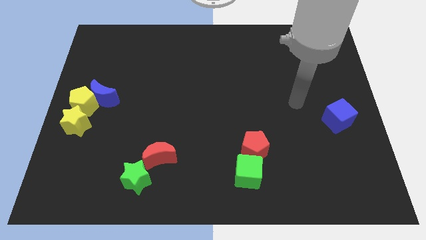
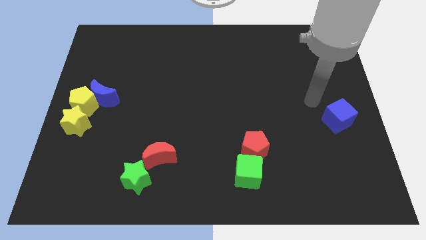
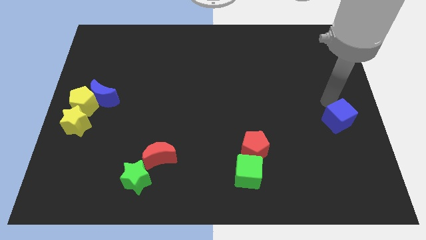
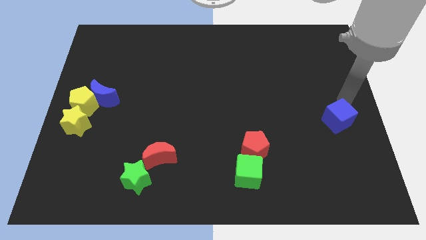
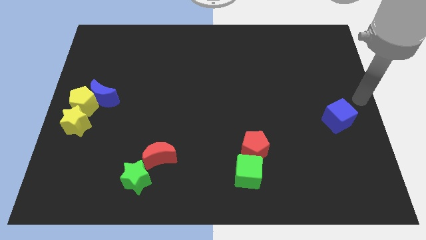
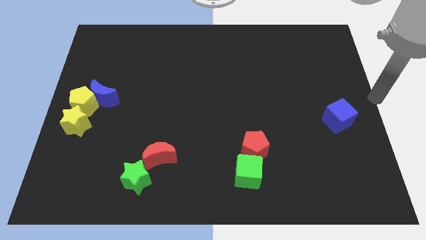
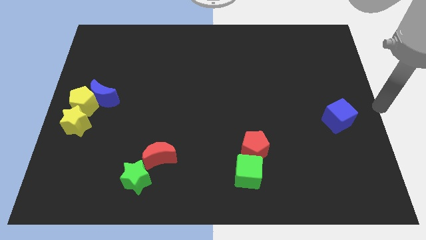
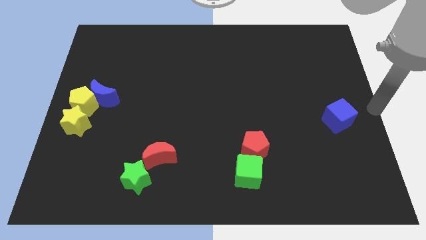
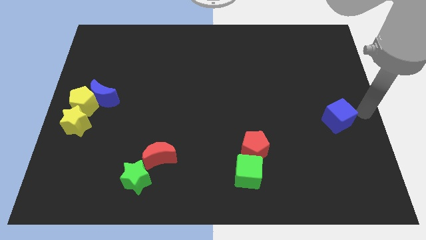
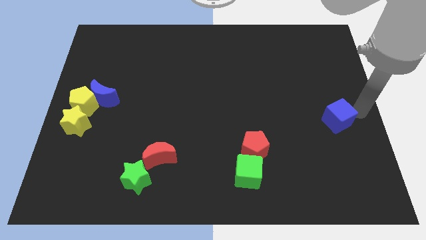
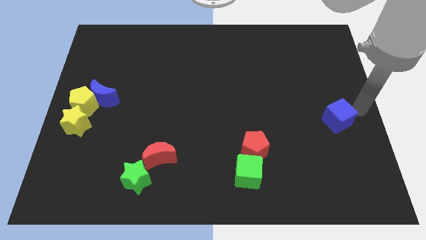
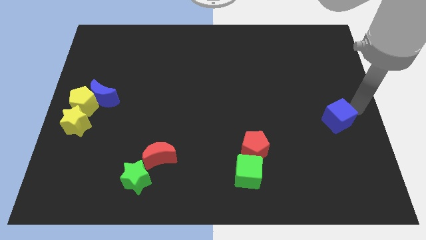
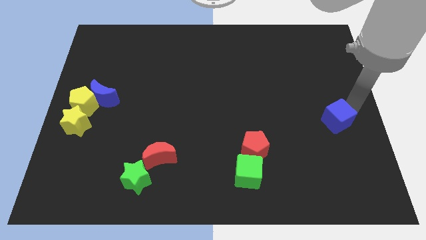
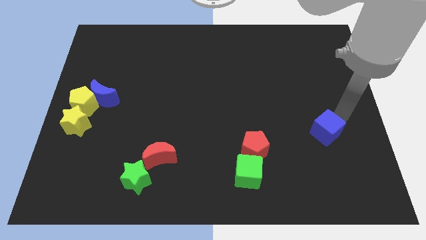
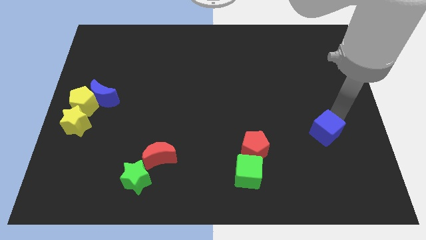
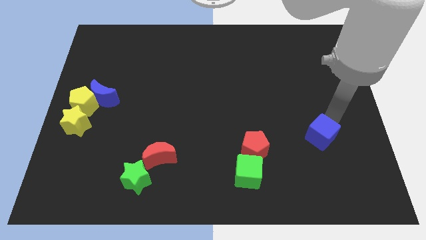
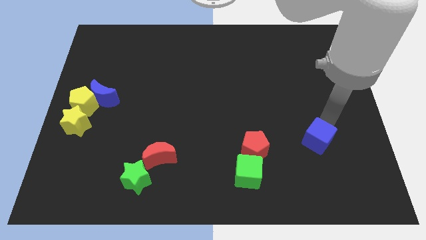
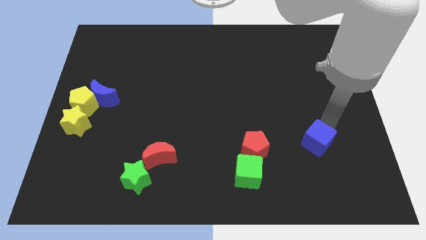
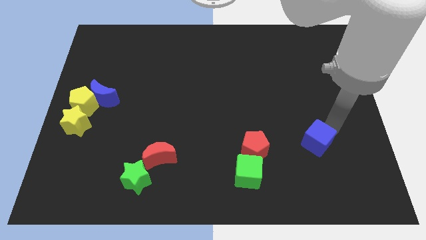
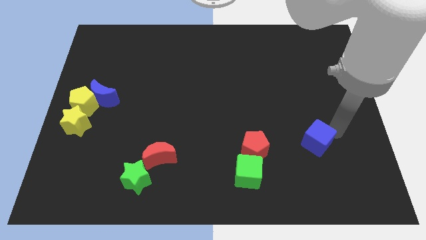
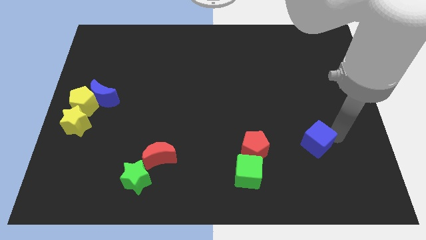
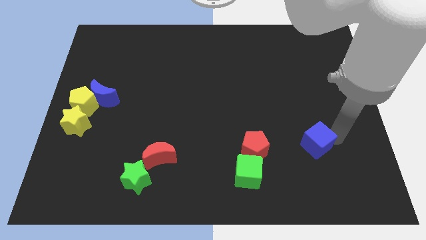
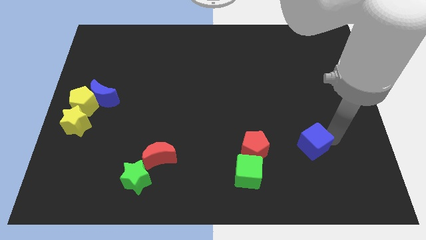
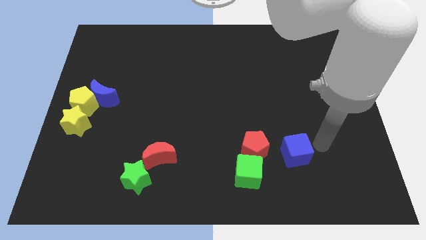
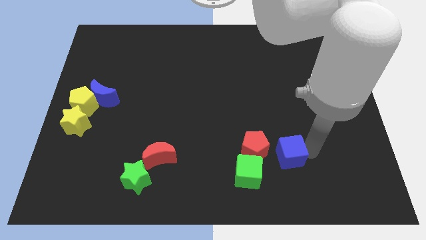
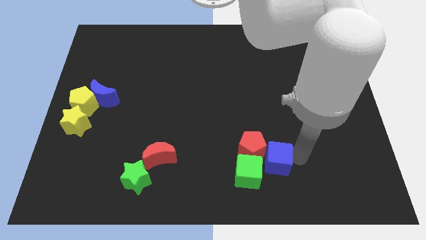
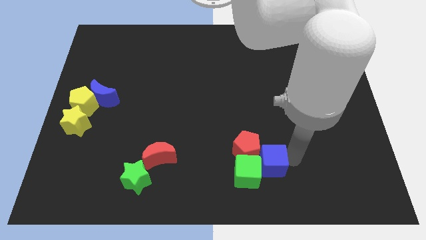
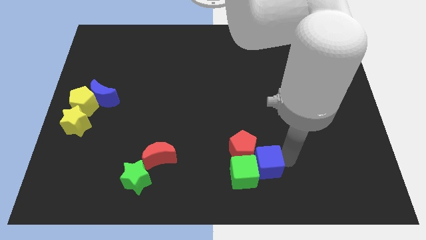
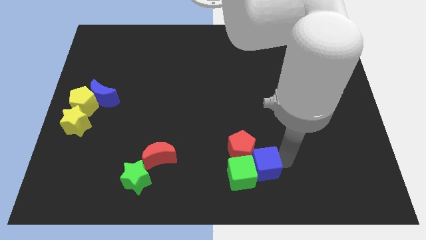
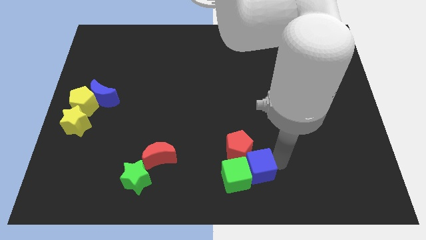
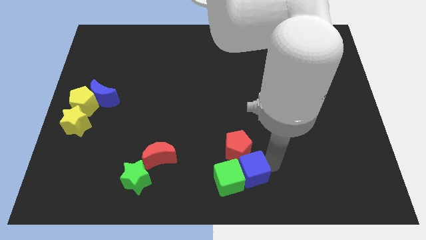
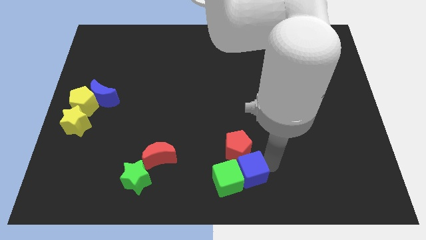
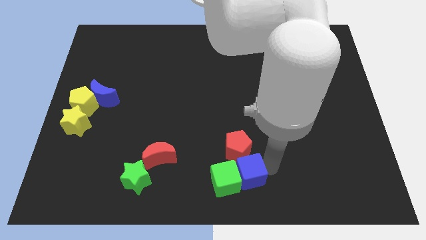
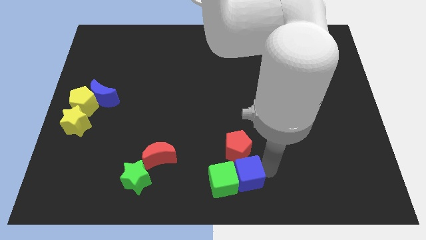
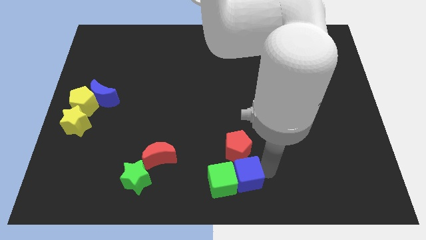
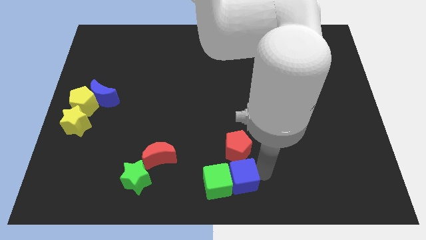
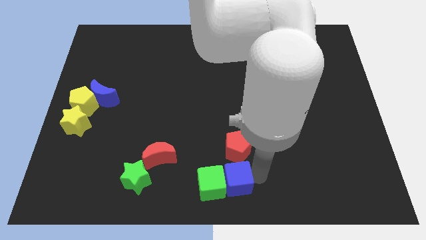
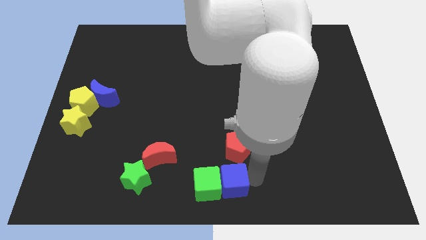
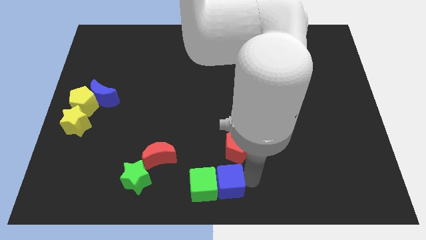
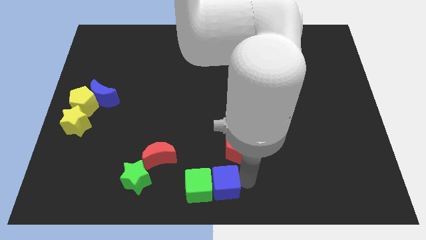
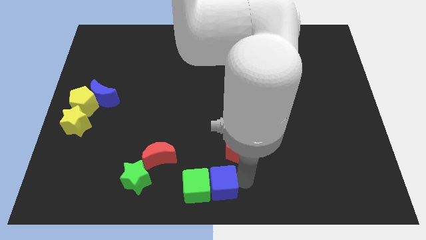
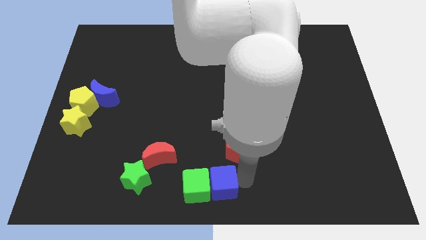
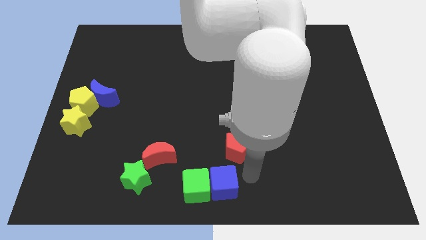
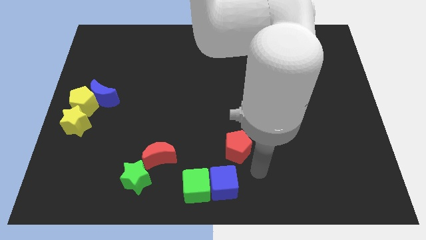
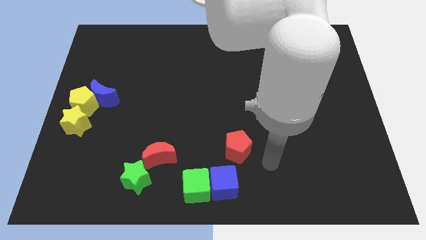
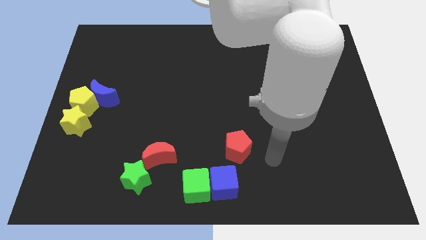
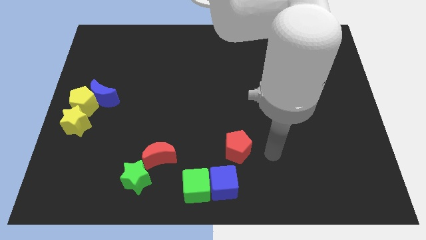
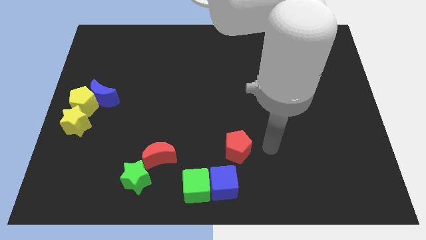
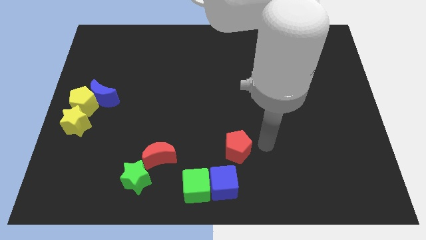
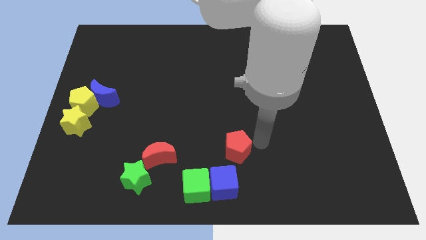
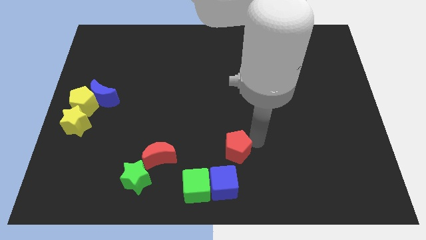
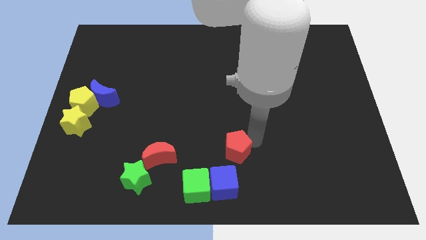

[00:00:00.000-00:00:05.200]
move blue cube to the bottom left of red pentagon

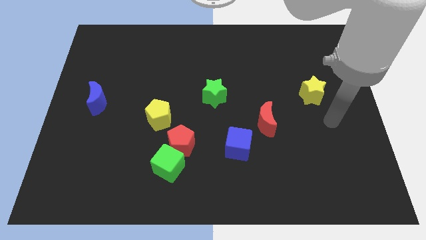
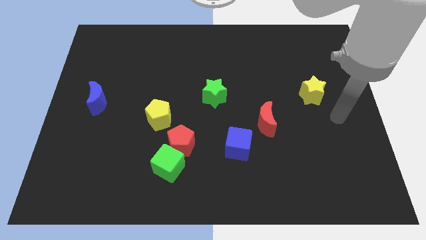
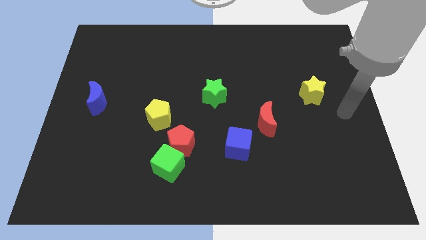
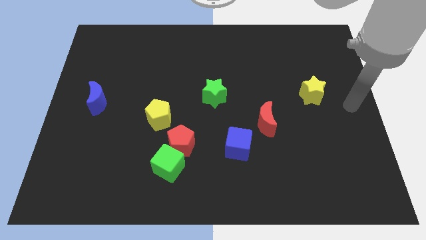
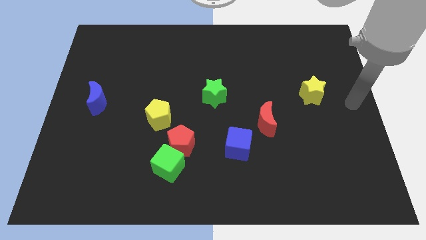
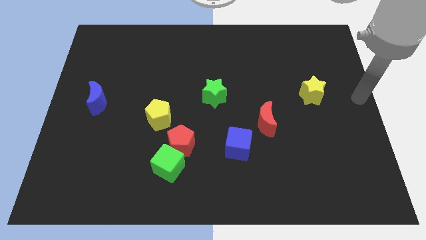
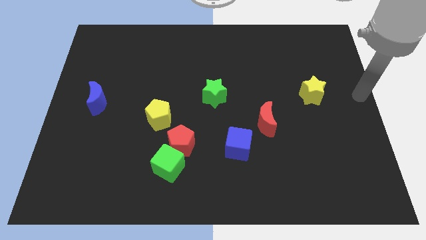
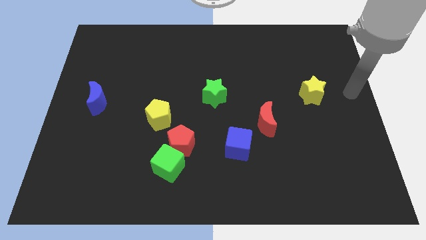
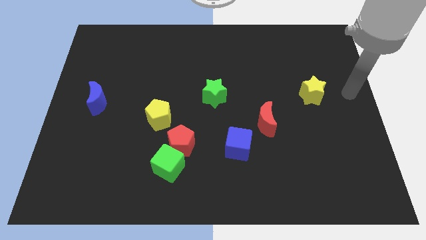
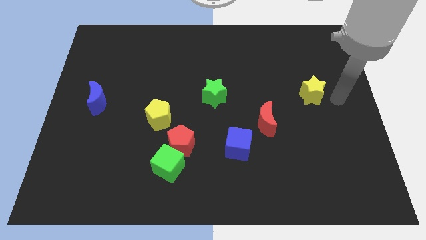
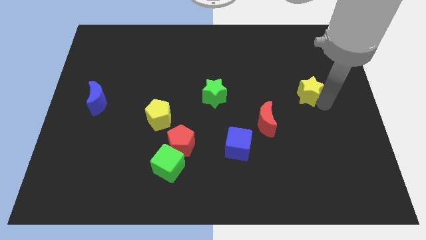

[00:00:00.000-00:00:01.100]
point your arm at the bottom of the yellow star

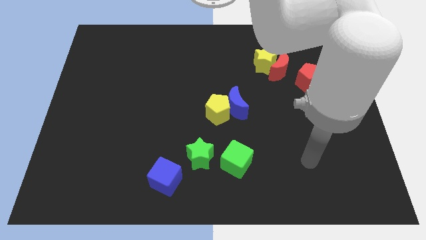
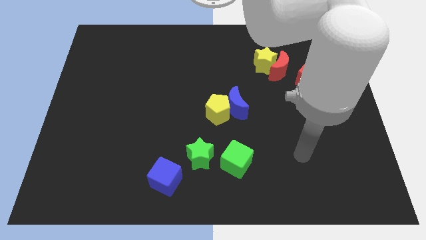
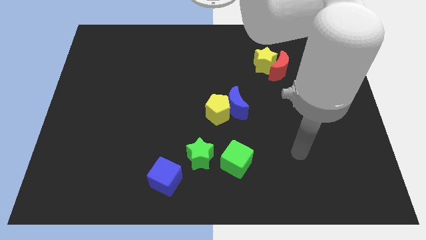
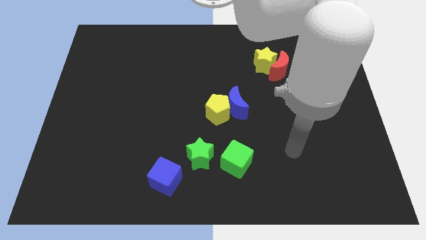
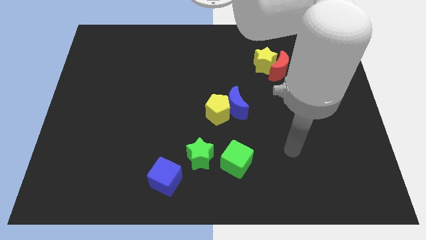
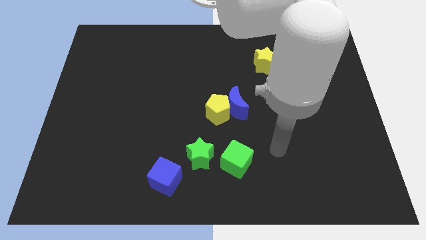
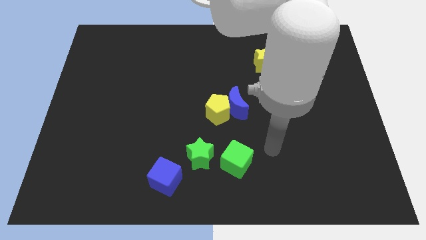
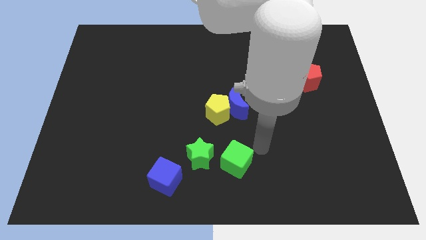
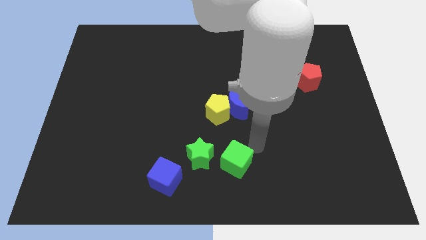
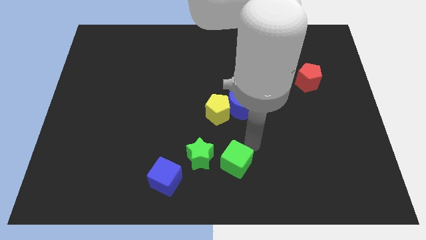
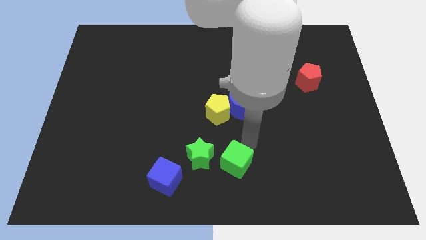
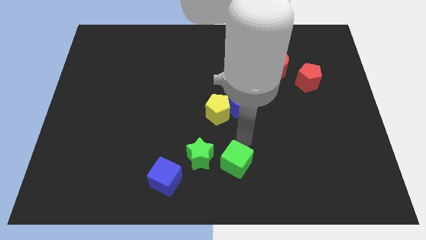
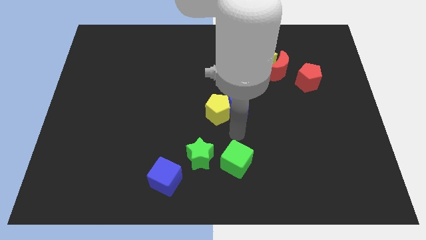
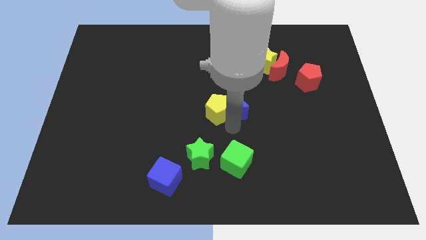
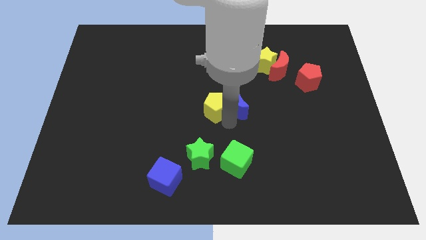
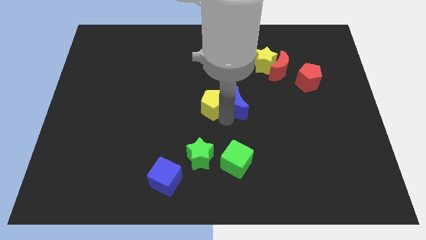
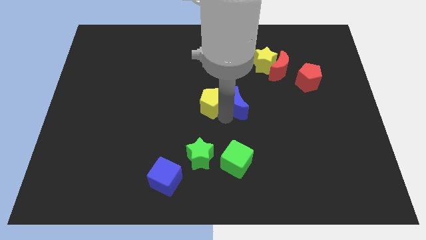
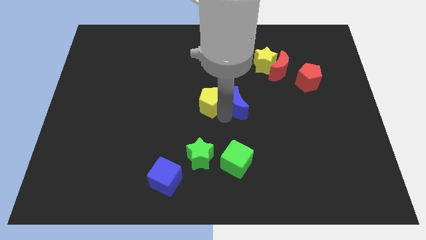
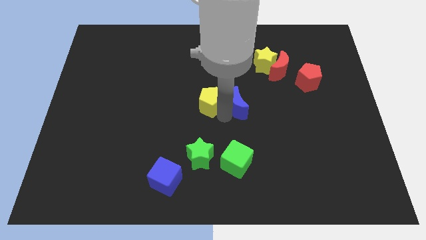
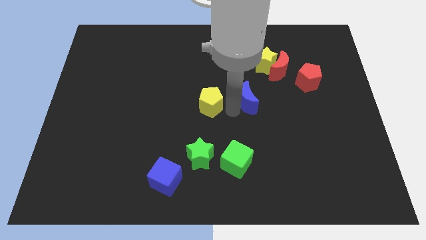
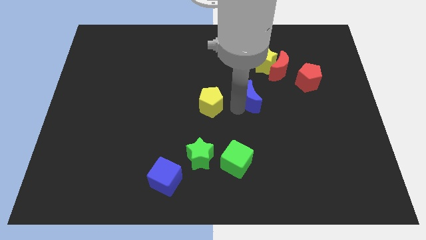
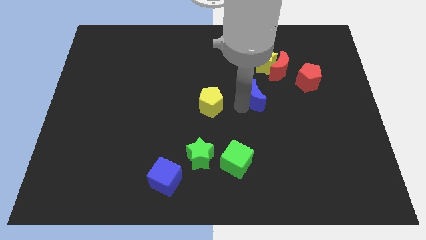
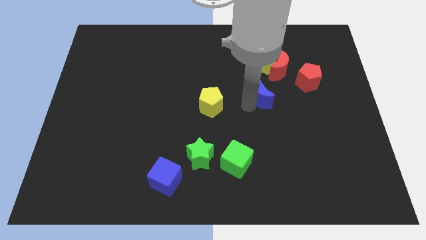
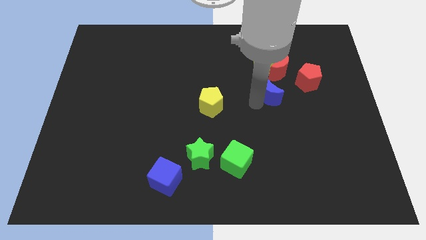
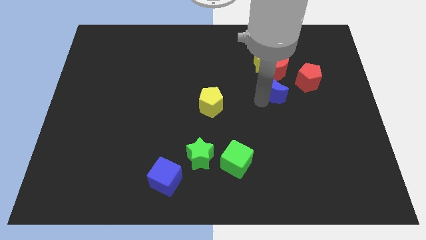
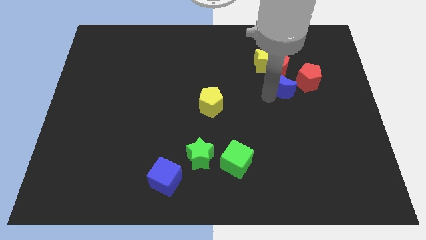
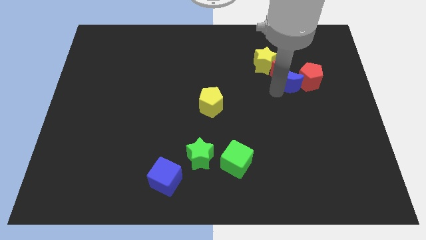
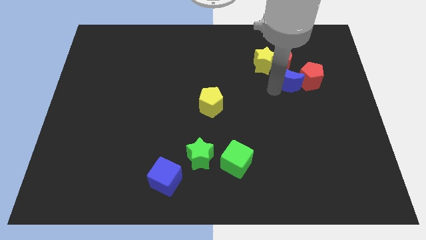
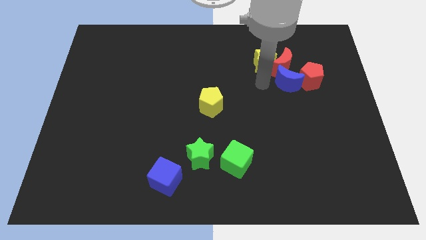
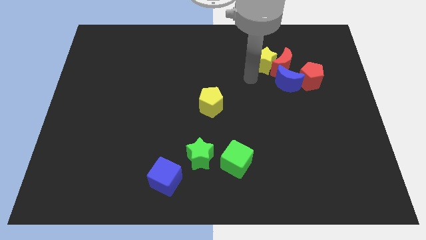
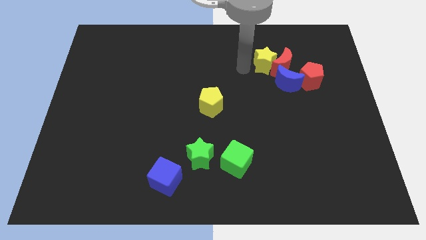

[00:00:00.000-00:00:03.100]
separate blue moon and the yellow pentagon
